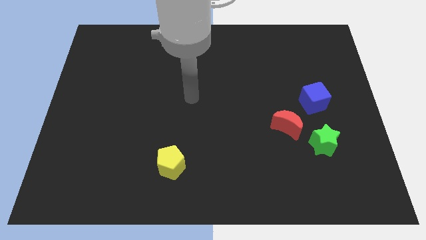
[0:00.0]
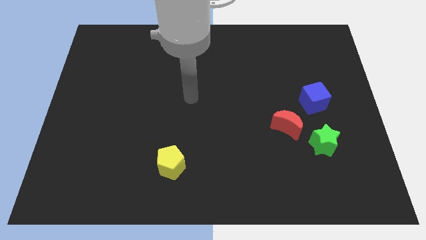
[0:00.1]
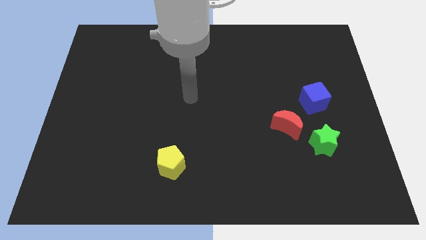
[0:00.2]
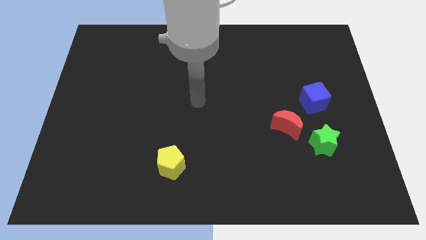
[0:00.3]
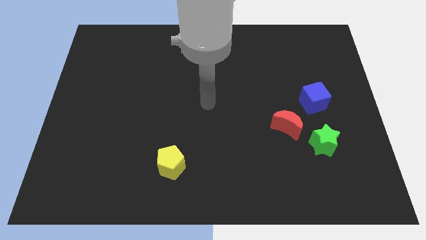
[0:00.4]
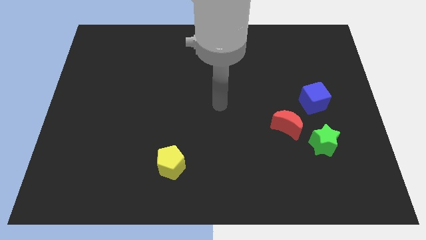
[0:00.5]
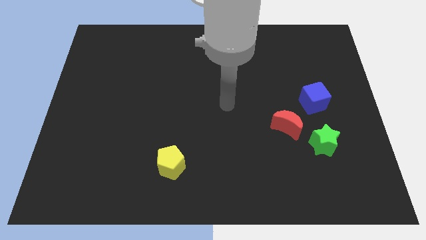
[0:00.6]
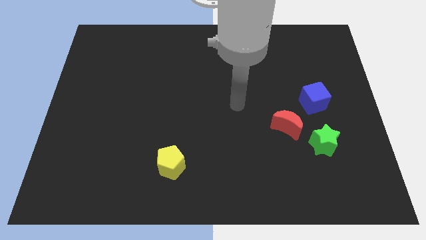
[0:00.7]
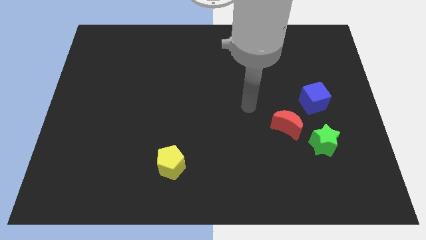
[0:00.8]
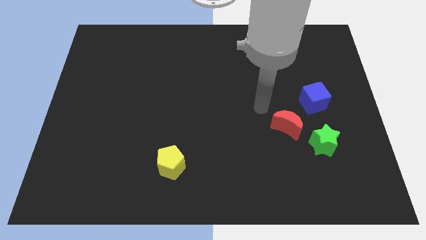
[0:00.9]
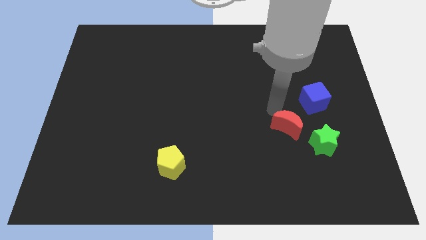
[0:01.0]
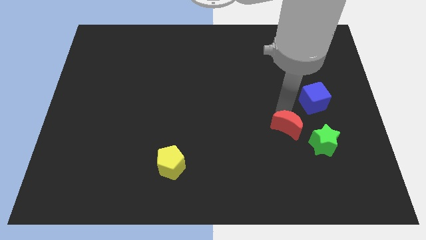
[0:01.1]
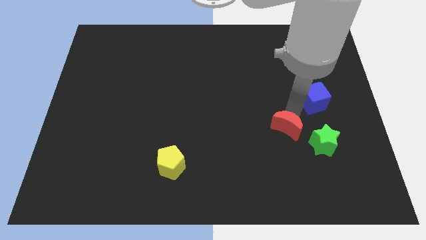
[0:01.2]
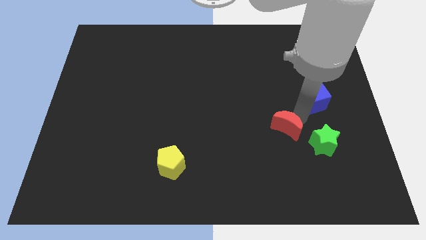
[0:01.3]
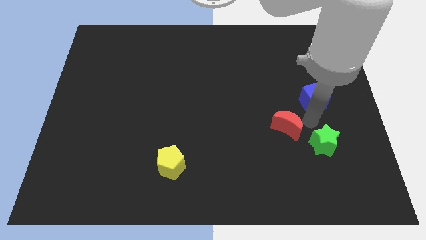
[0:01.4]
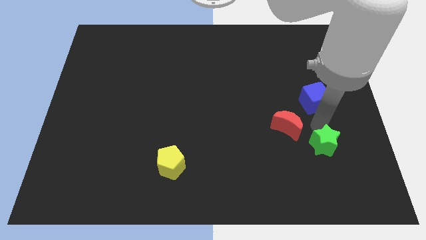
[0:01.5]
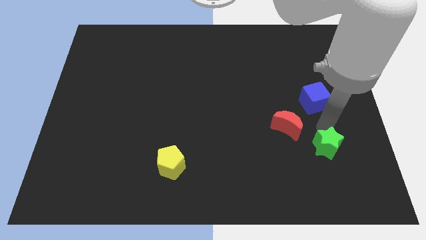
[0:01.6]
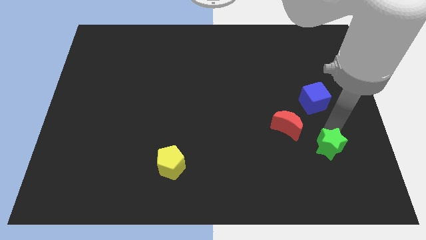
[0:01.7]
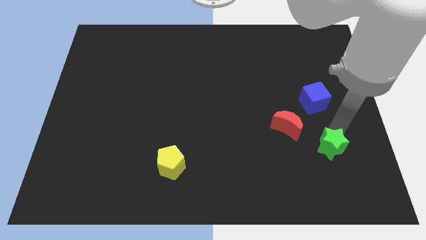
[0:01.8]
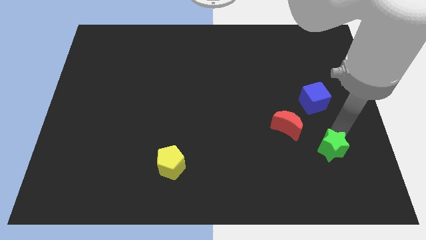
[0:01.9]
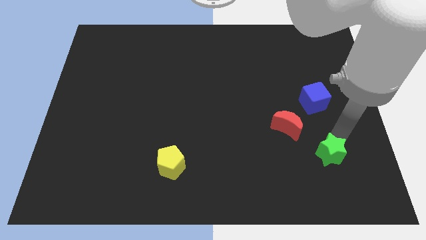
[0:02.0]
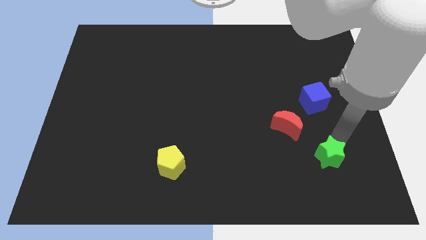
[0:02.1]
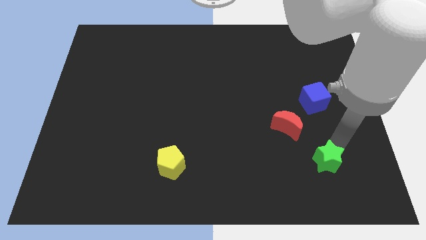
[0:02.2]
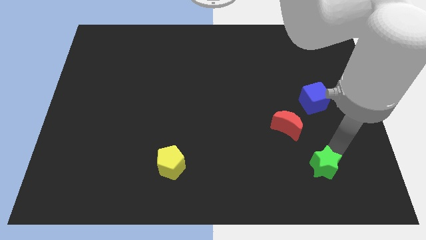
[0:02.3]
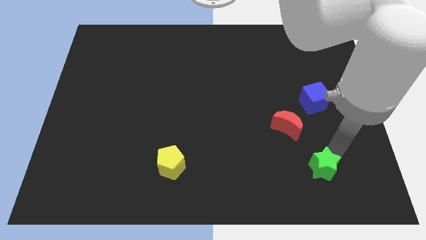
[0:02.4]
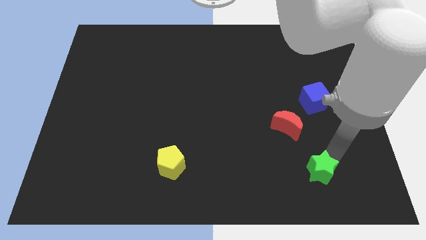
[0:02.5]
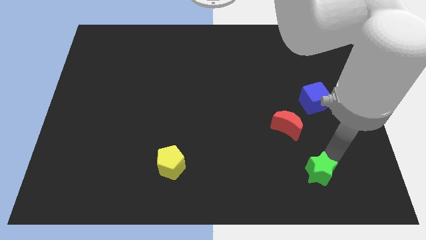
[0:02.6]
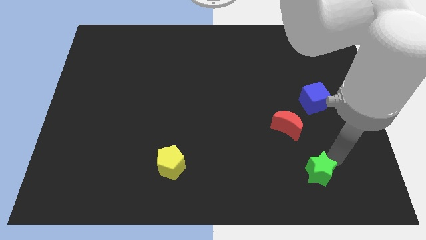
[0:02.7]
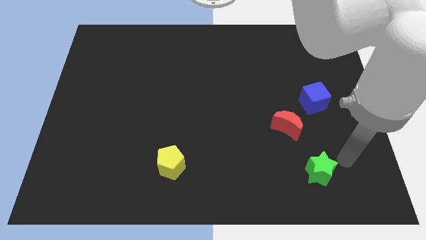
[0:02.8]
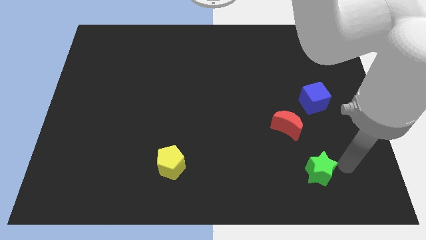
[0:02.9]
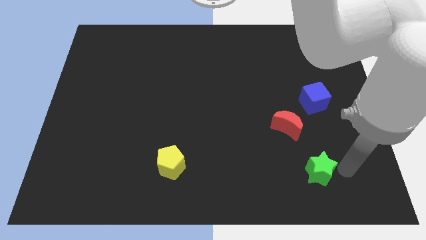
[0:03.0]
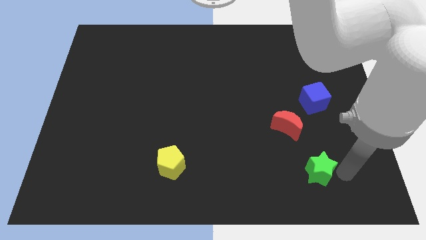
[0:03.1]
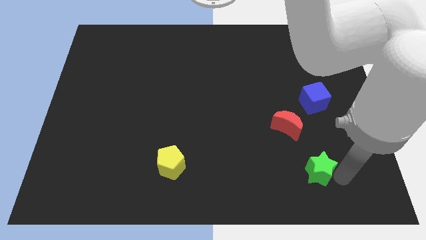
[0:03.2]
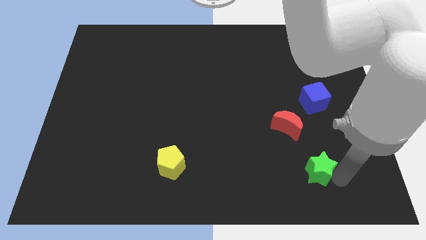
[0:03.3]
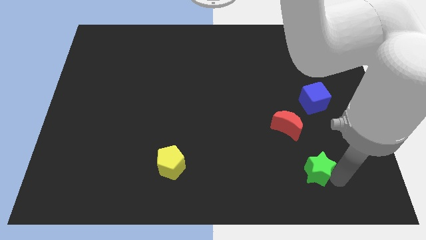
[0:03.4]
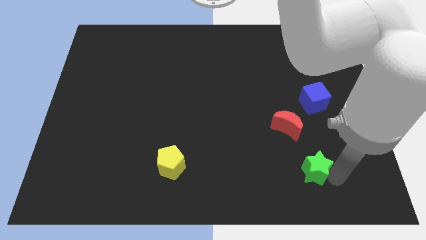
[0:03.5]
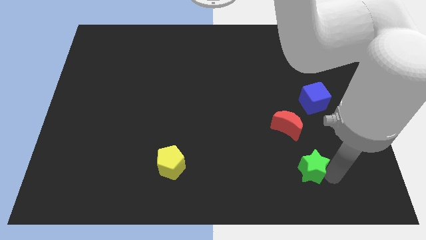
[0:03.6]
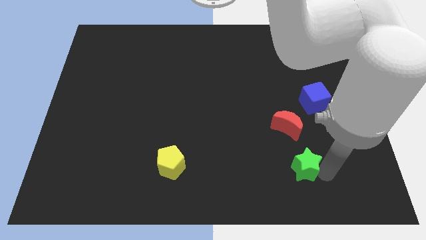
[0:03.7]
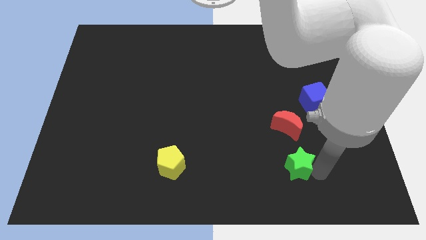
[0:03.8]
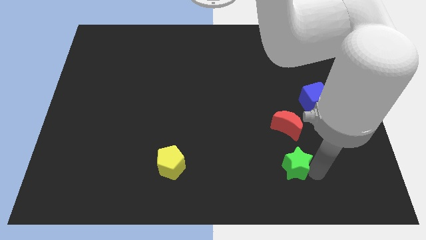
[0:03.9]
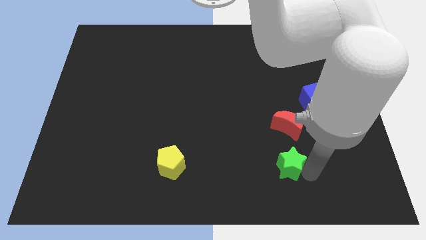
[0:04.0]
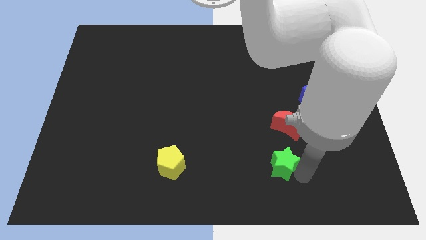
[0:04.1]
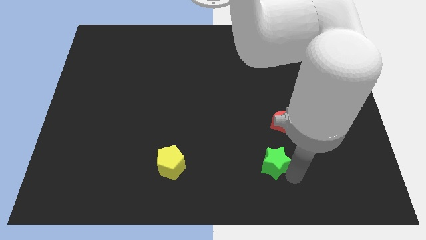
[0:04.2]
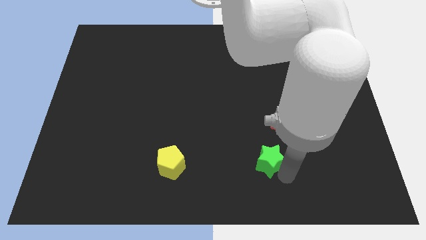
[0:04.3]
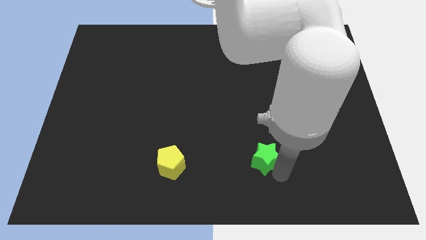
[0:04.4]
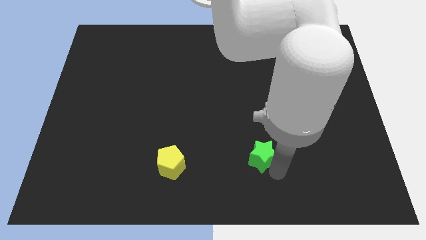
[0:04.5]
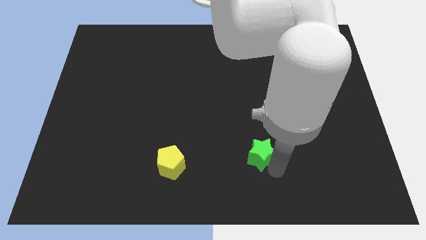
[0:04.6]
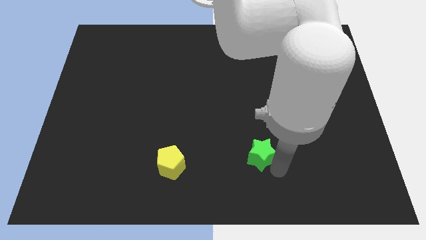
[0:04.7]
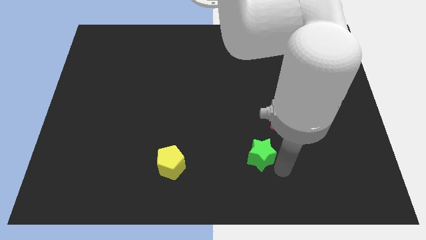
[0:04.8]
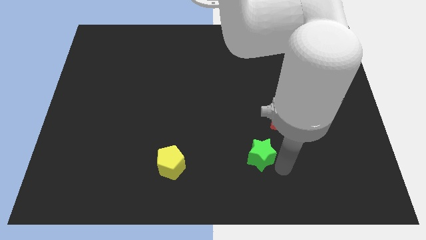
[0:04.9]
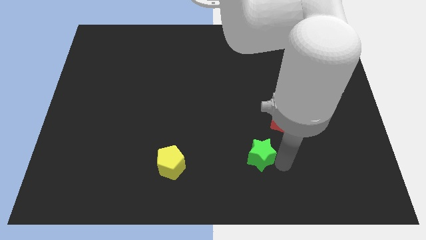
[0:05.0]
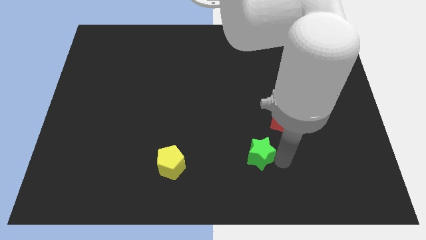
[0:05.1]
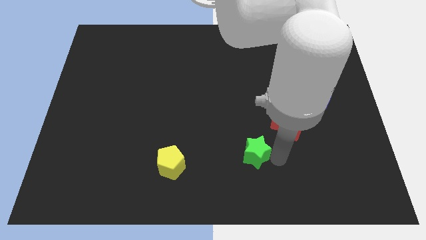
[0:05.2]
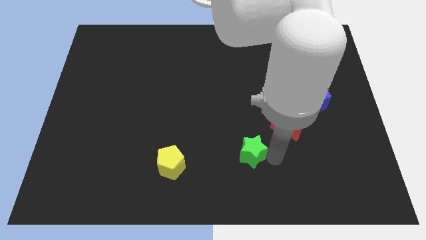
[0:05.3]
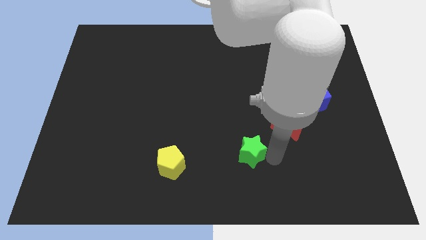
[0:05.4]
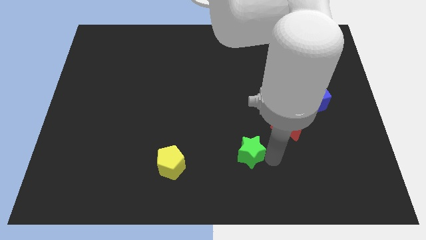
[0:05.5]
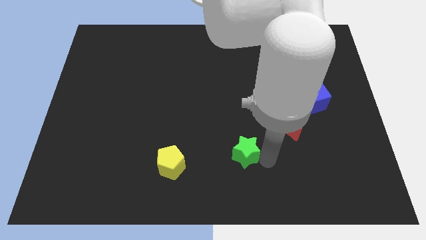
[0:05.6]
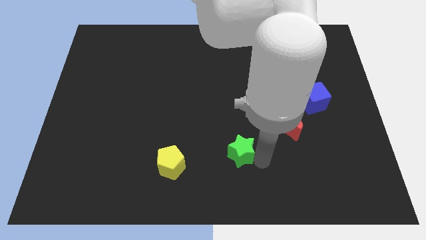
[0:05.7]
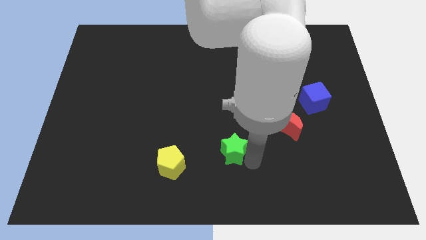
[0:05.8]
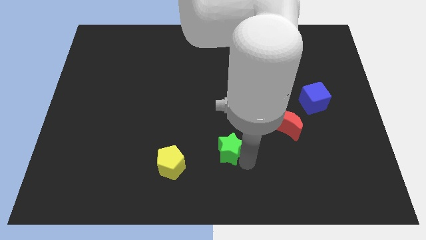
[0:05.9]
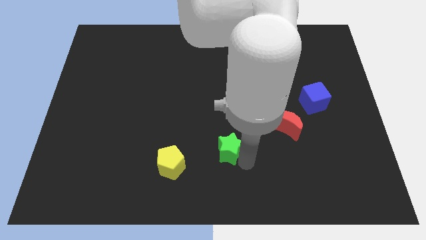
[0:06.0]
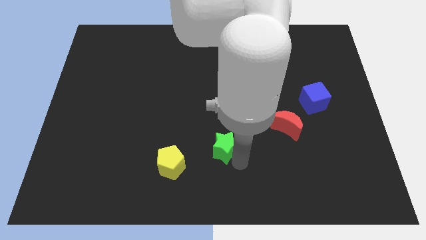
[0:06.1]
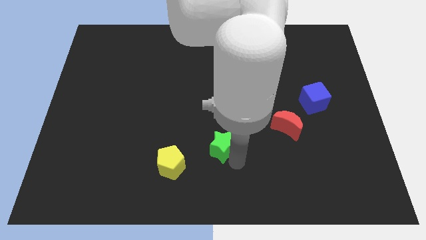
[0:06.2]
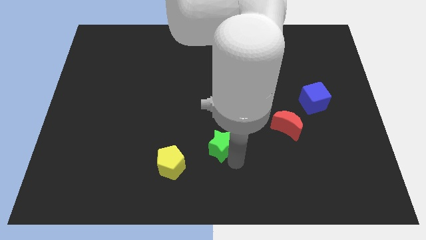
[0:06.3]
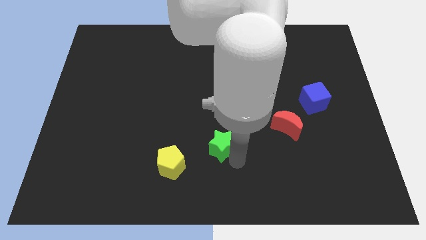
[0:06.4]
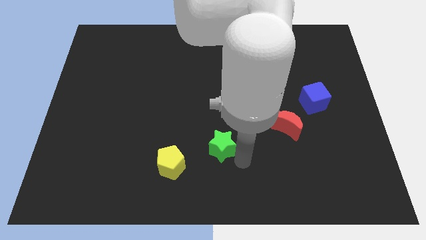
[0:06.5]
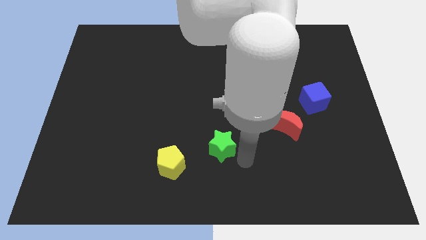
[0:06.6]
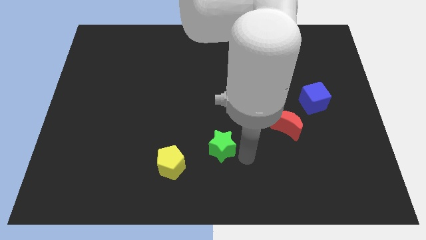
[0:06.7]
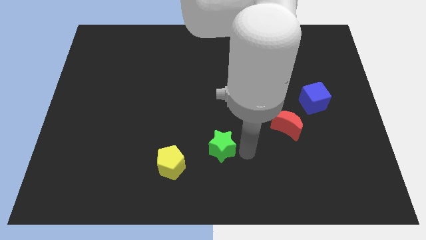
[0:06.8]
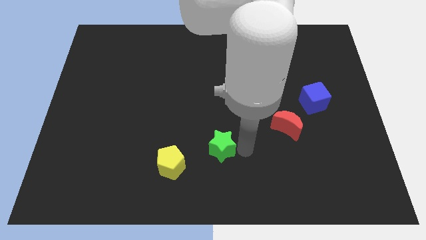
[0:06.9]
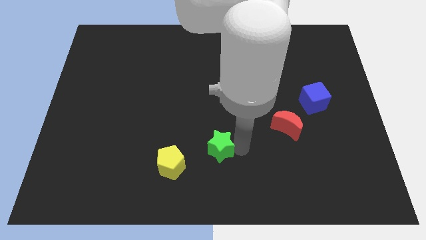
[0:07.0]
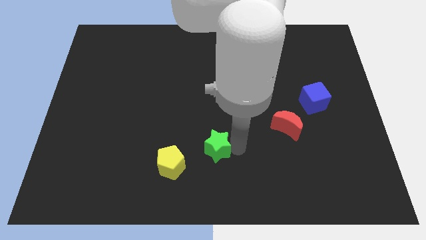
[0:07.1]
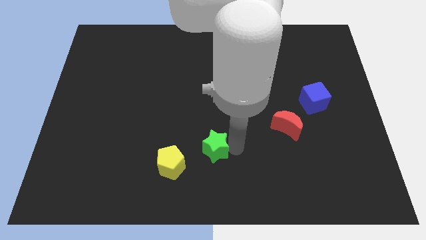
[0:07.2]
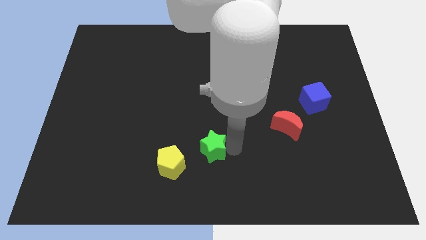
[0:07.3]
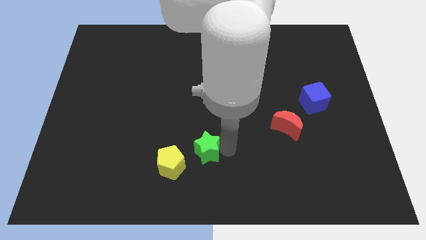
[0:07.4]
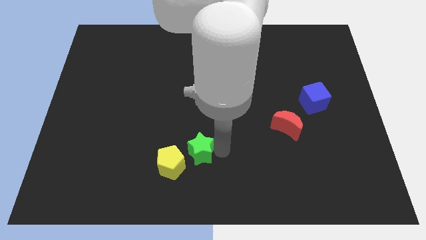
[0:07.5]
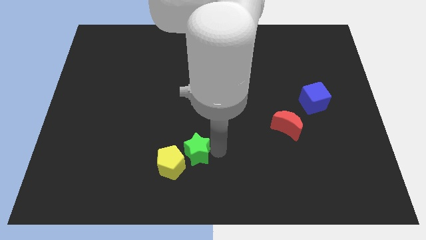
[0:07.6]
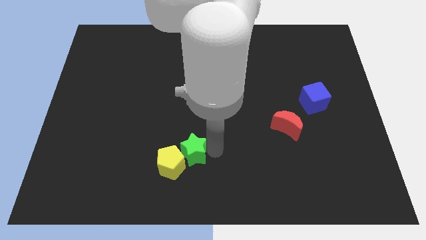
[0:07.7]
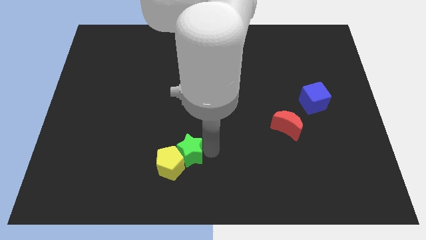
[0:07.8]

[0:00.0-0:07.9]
put the green block next to the yellow block

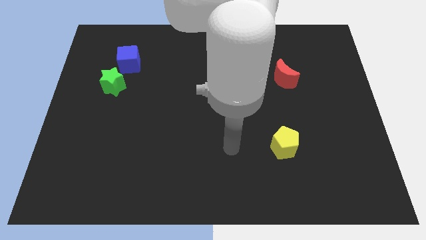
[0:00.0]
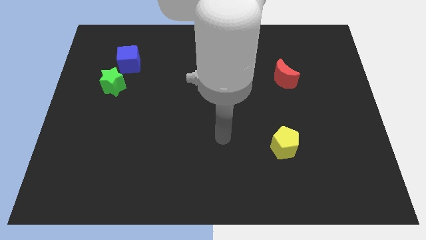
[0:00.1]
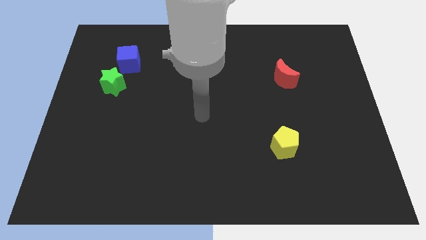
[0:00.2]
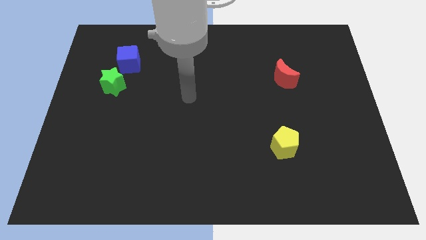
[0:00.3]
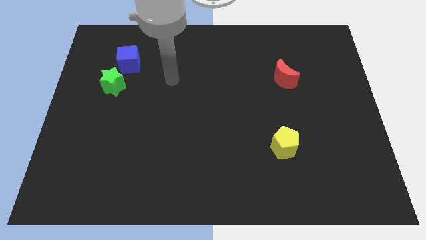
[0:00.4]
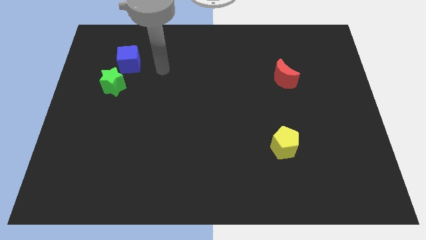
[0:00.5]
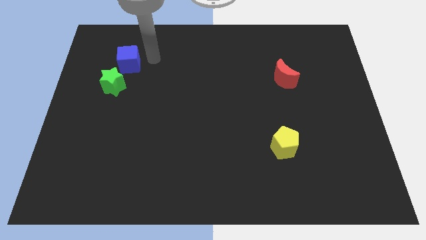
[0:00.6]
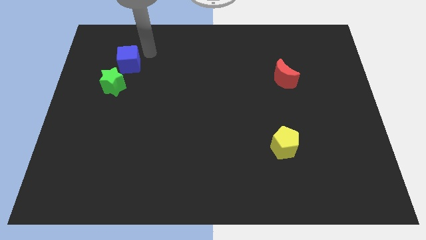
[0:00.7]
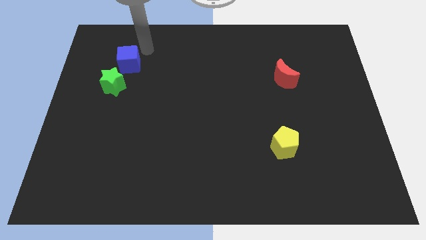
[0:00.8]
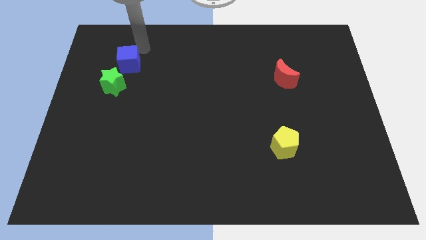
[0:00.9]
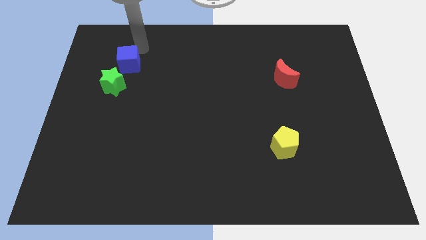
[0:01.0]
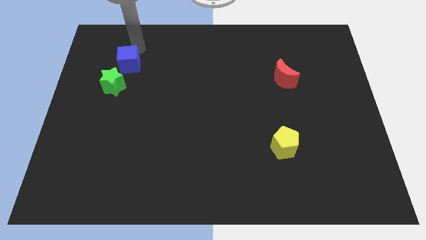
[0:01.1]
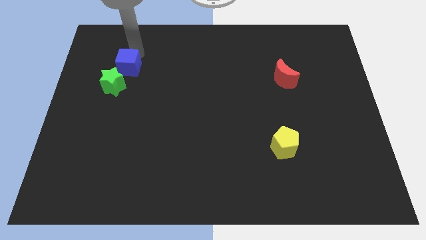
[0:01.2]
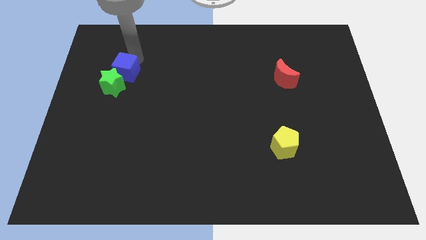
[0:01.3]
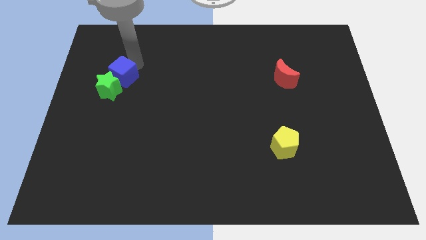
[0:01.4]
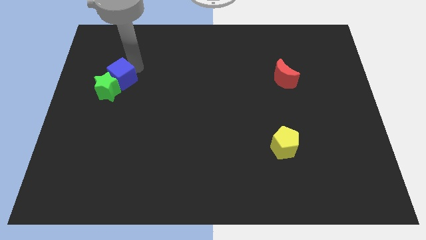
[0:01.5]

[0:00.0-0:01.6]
move the blue block towards the star
